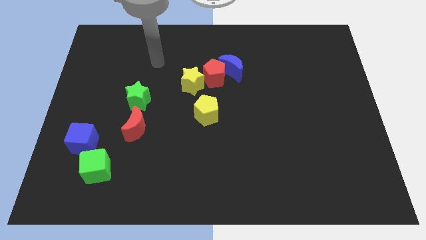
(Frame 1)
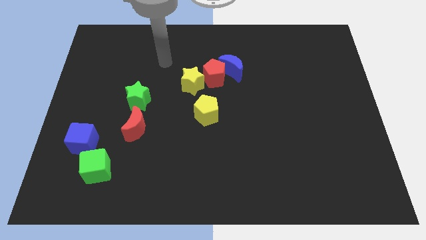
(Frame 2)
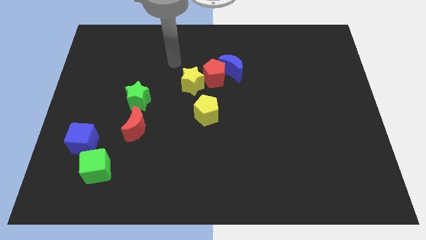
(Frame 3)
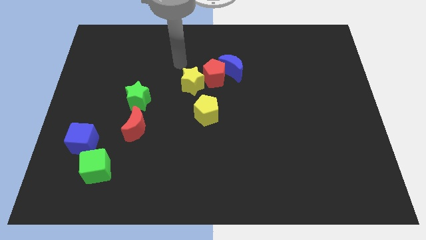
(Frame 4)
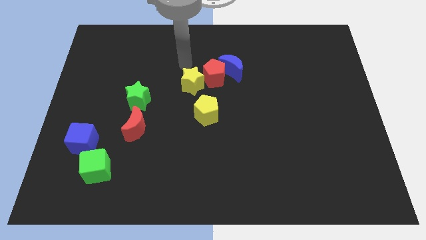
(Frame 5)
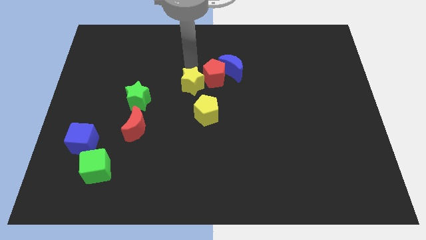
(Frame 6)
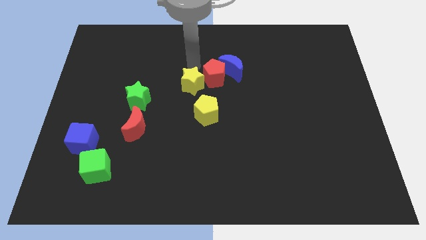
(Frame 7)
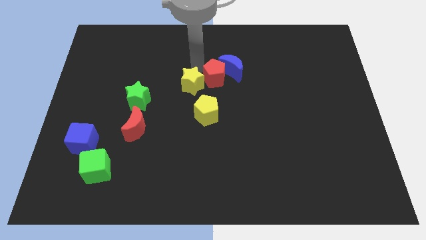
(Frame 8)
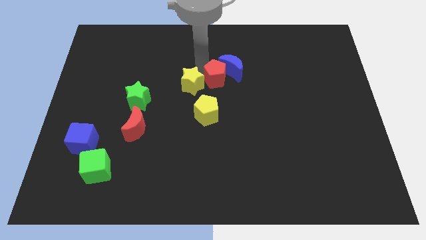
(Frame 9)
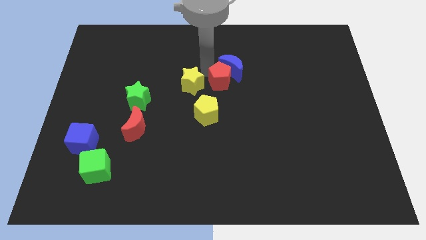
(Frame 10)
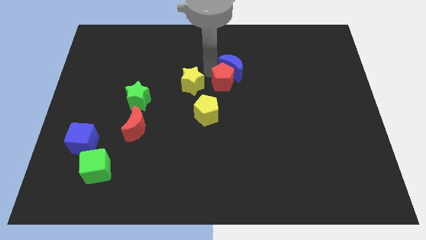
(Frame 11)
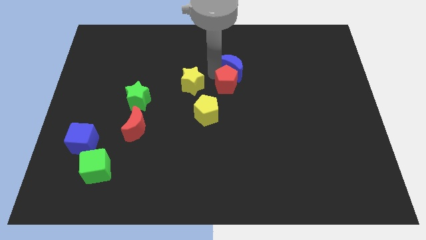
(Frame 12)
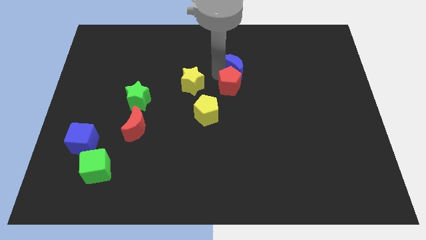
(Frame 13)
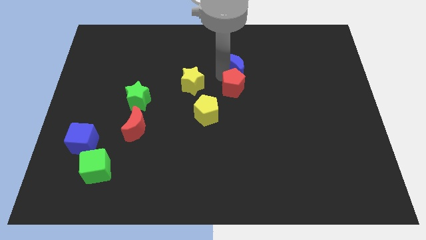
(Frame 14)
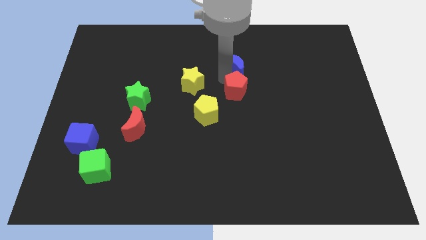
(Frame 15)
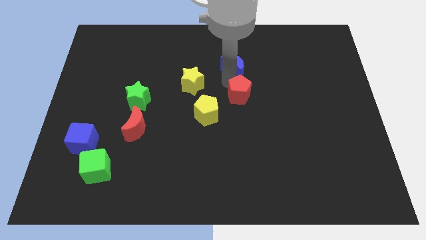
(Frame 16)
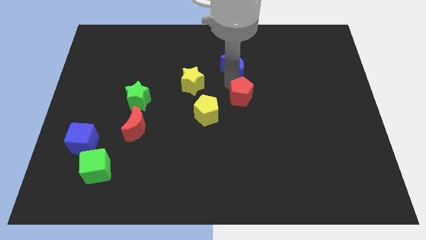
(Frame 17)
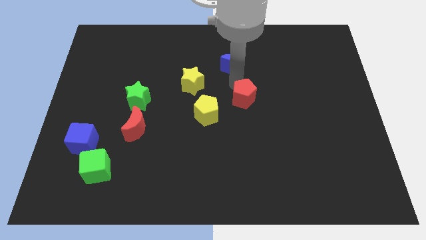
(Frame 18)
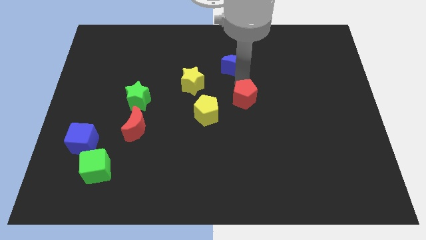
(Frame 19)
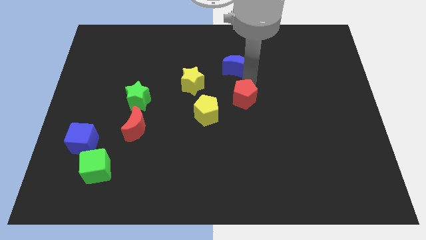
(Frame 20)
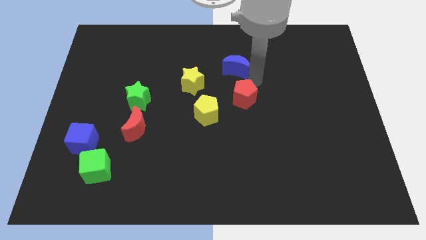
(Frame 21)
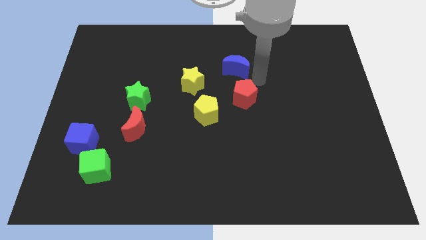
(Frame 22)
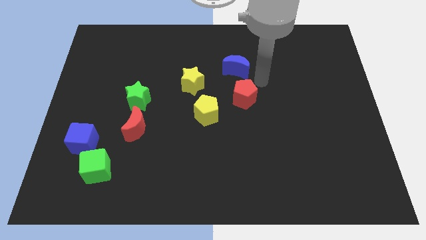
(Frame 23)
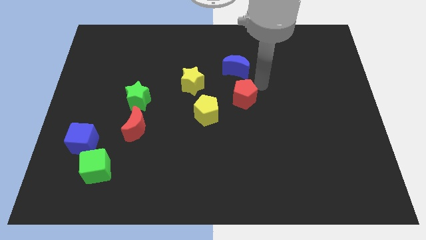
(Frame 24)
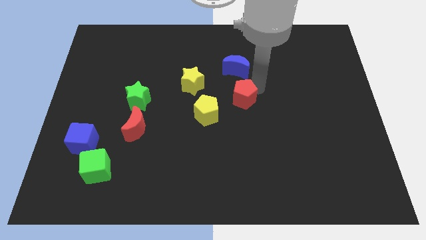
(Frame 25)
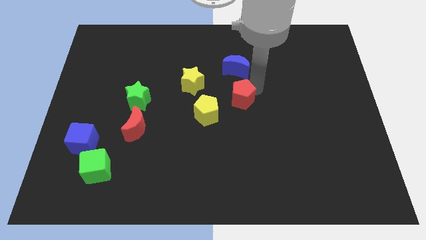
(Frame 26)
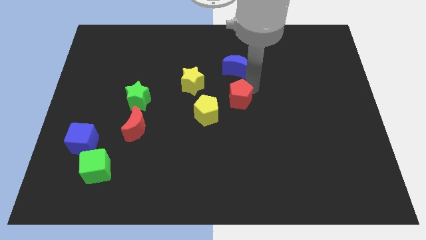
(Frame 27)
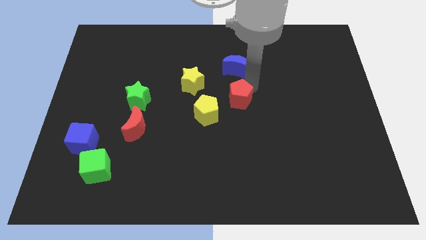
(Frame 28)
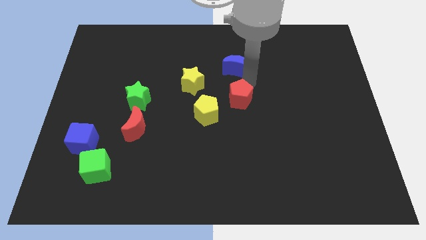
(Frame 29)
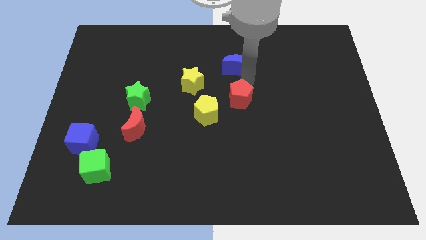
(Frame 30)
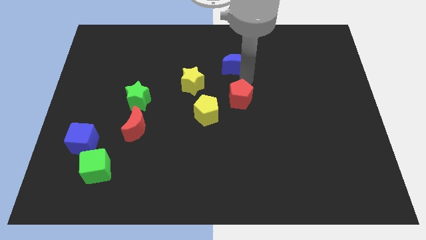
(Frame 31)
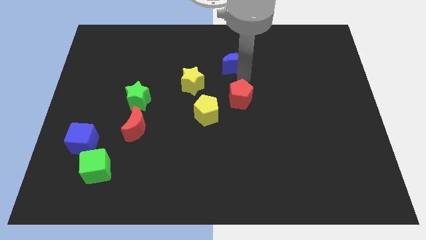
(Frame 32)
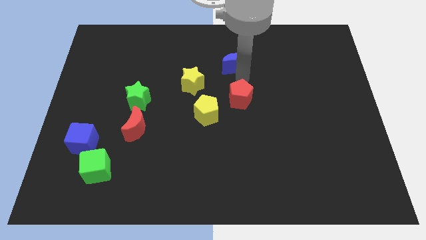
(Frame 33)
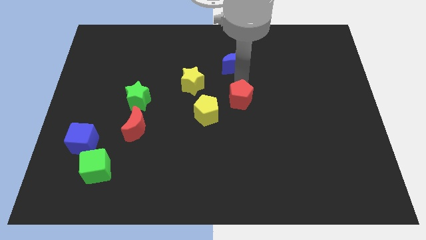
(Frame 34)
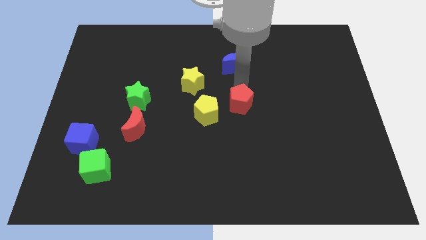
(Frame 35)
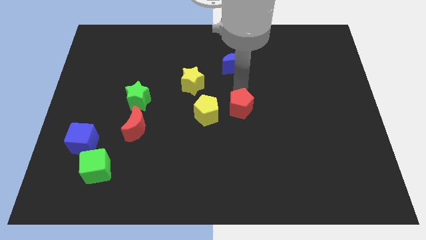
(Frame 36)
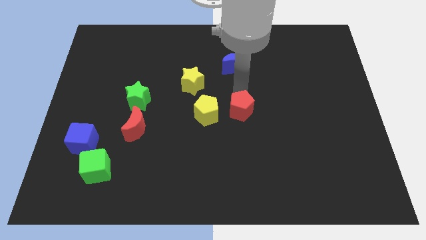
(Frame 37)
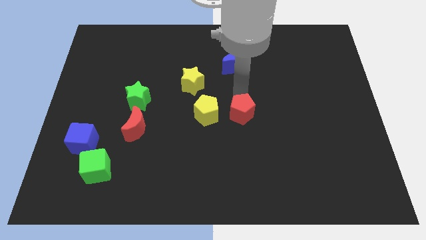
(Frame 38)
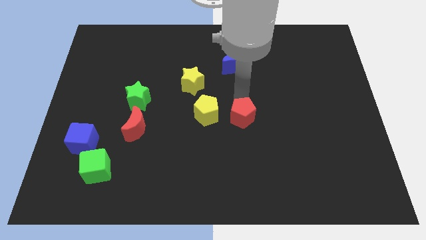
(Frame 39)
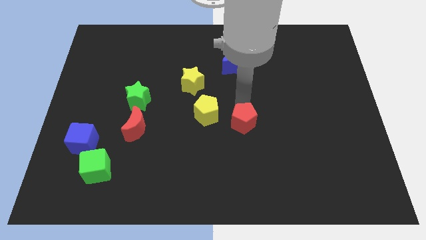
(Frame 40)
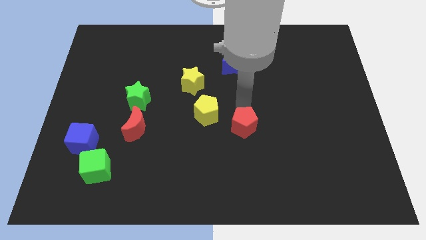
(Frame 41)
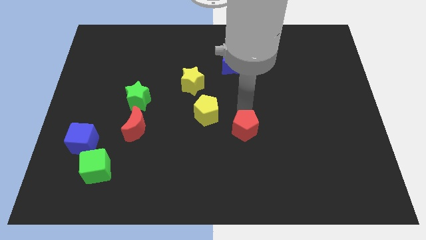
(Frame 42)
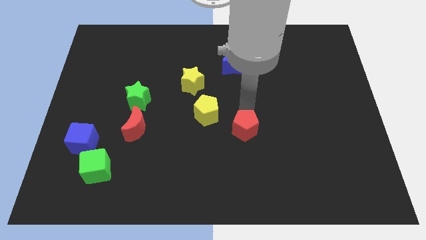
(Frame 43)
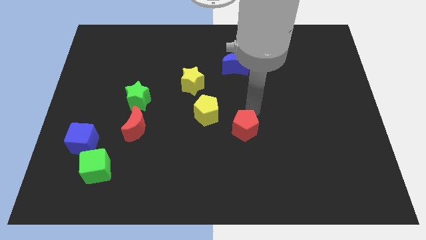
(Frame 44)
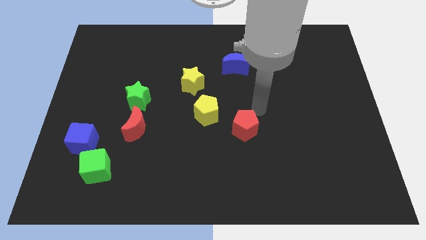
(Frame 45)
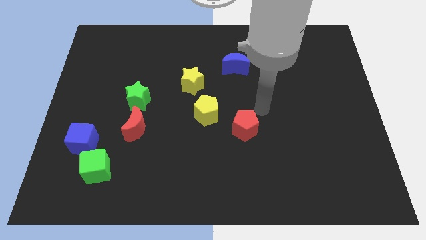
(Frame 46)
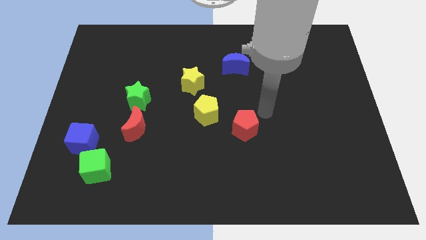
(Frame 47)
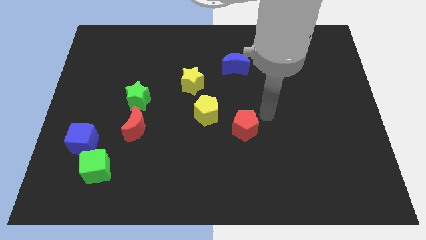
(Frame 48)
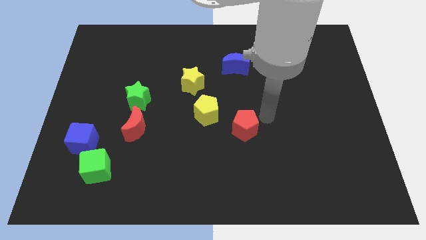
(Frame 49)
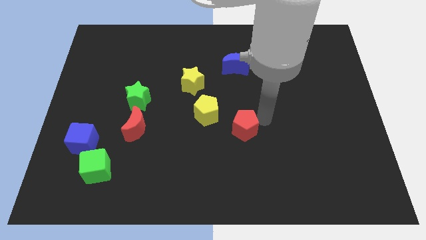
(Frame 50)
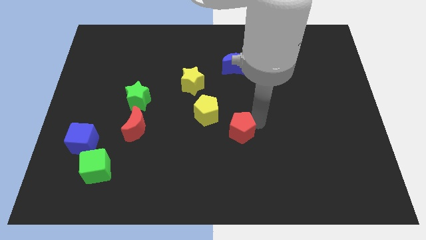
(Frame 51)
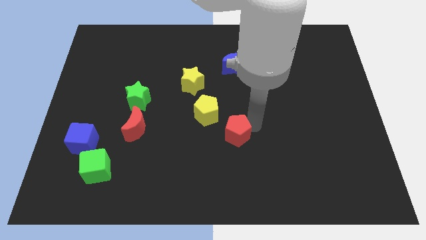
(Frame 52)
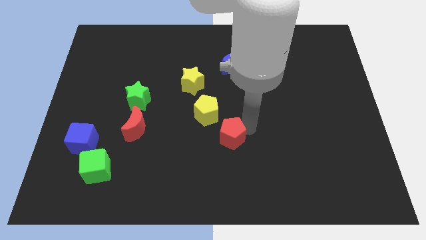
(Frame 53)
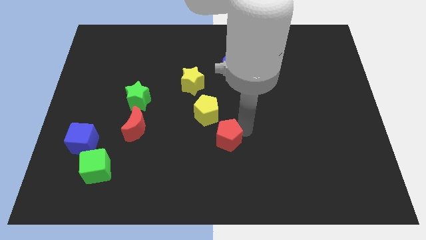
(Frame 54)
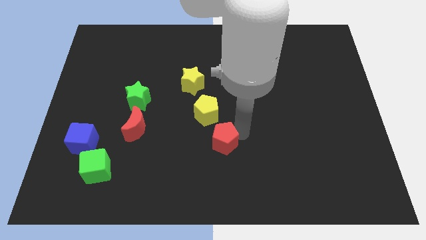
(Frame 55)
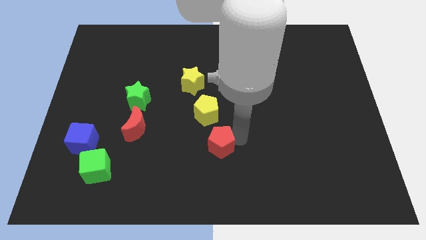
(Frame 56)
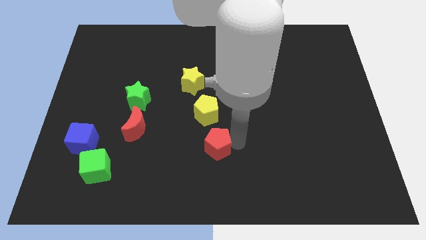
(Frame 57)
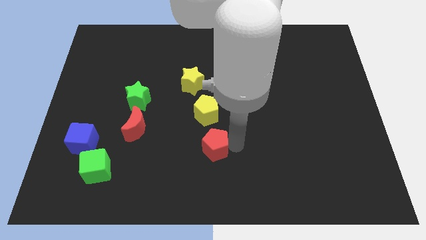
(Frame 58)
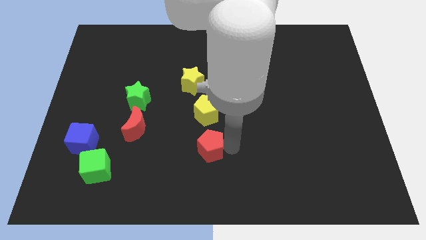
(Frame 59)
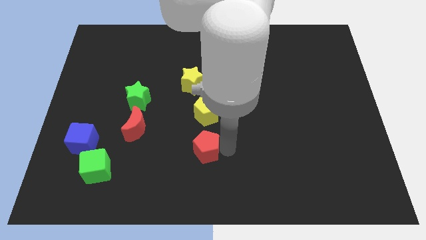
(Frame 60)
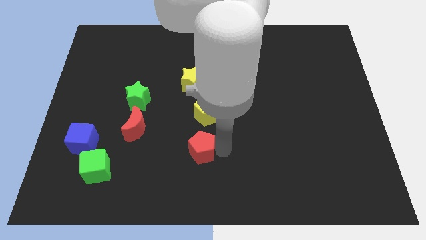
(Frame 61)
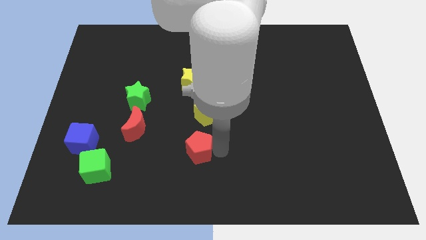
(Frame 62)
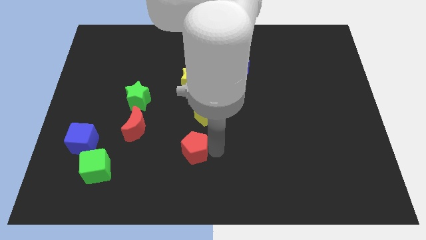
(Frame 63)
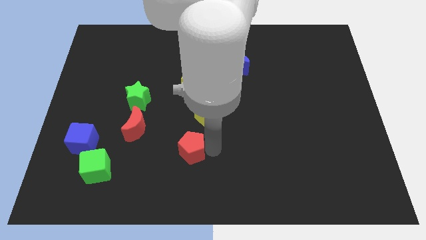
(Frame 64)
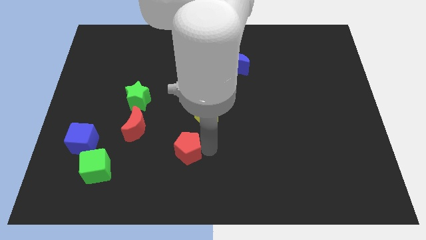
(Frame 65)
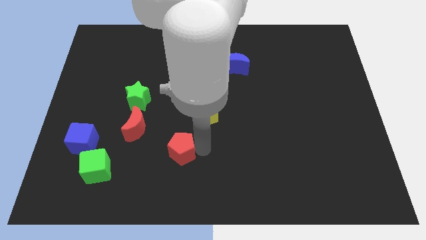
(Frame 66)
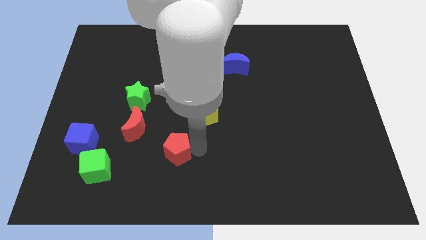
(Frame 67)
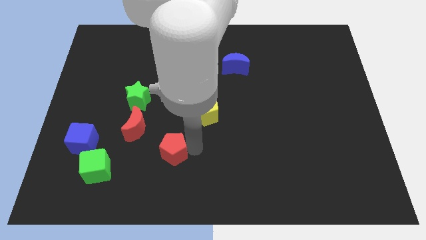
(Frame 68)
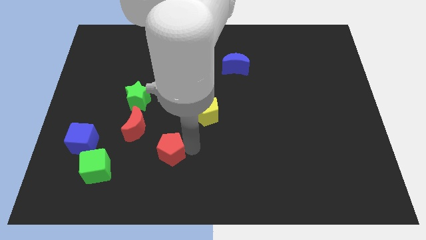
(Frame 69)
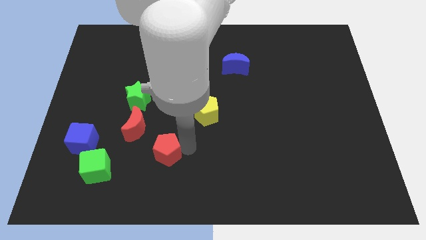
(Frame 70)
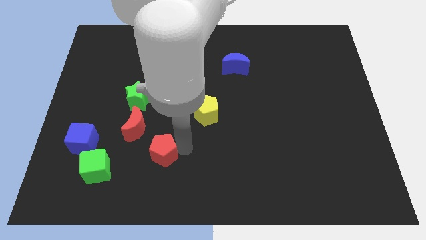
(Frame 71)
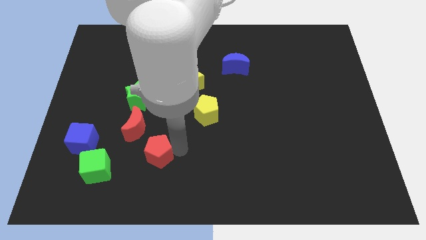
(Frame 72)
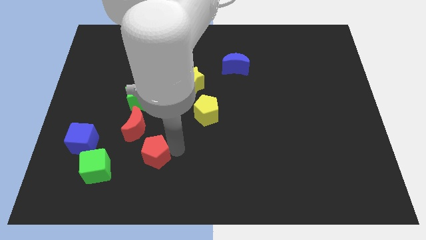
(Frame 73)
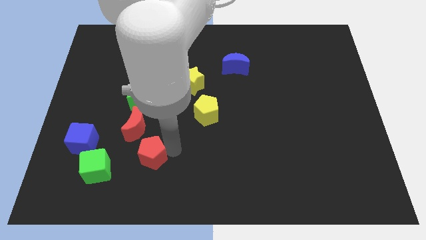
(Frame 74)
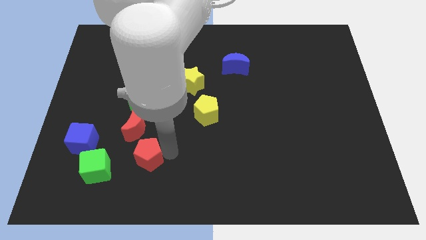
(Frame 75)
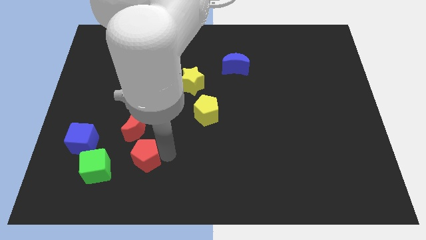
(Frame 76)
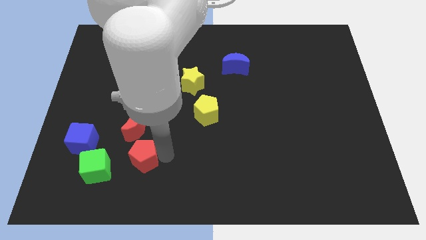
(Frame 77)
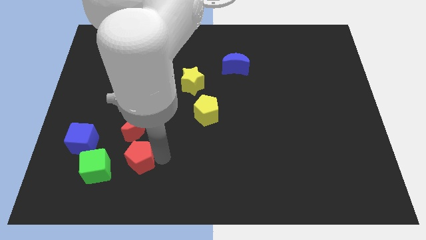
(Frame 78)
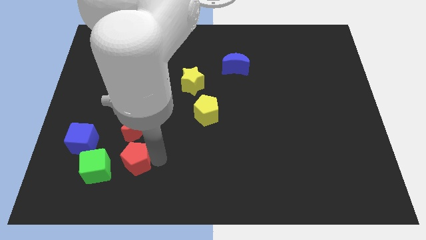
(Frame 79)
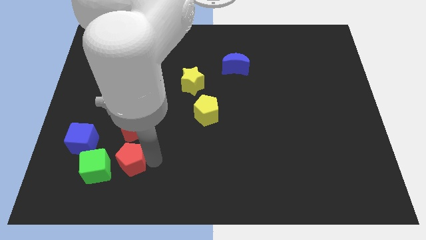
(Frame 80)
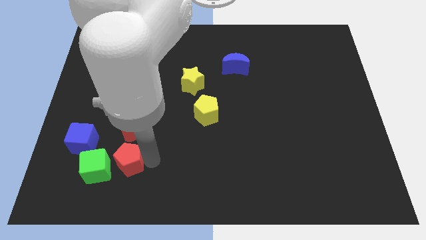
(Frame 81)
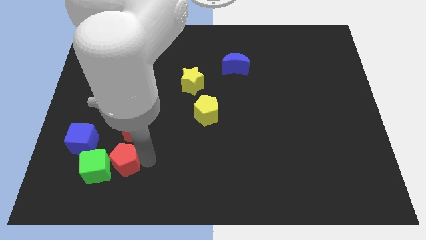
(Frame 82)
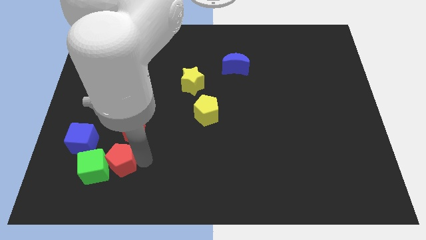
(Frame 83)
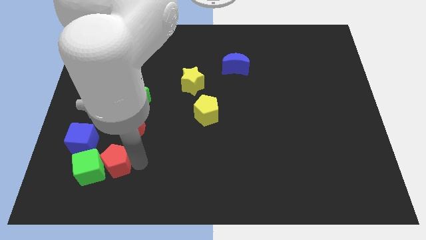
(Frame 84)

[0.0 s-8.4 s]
slide the red pentagon towards the green cube
